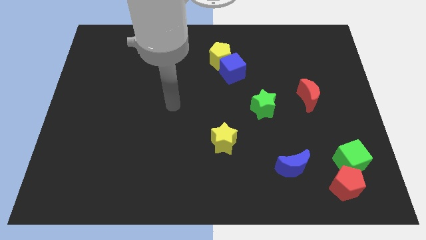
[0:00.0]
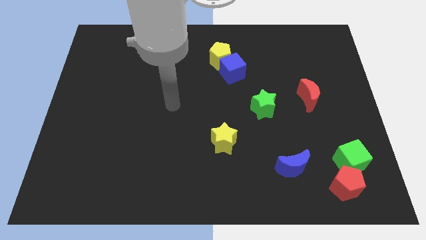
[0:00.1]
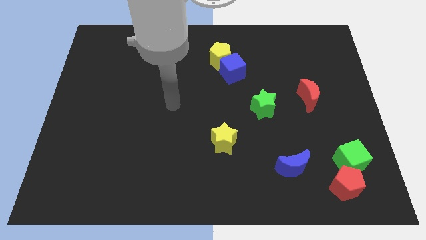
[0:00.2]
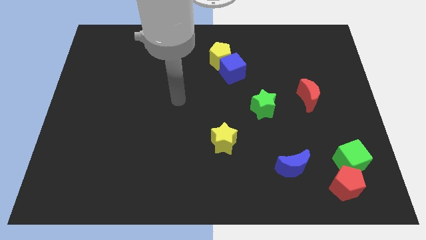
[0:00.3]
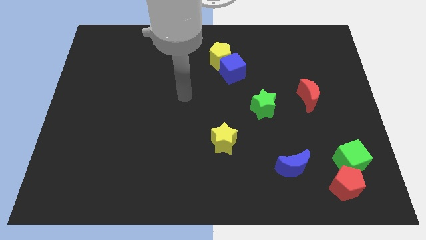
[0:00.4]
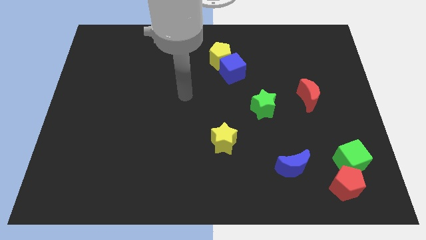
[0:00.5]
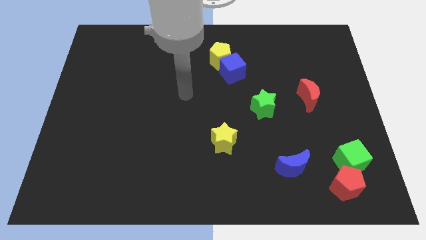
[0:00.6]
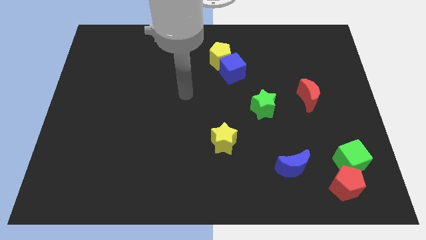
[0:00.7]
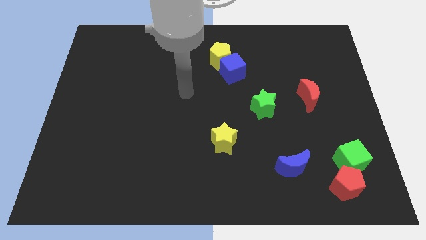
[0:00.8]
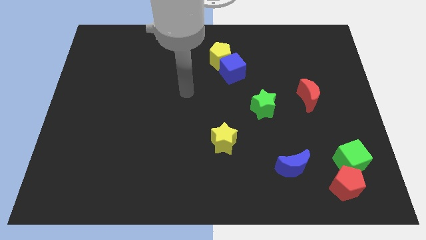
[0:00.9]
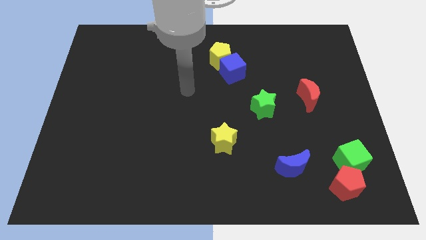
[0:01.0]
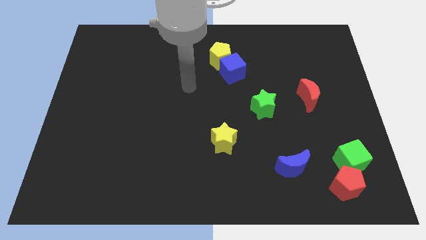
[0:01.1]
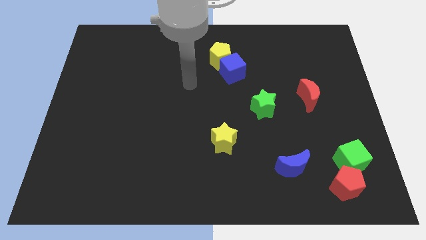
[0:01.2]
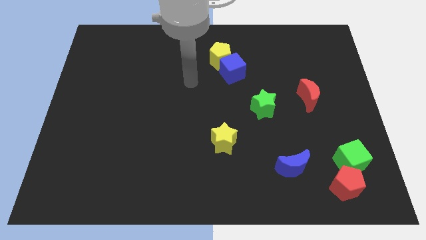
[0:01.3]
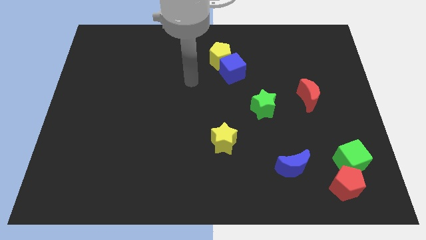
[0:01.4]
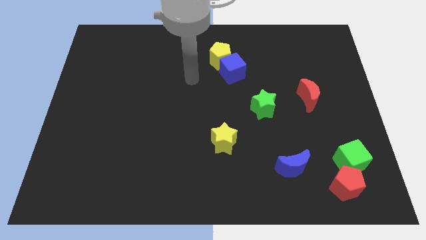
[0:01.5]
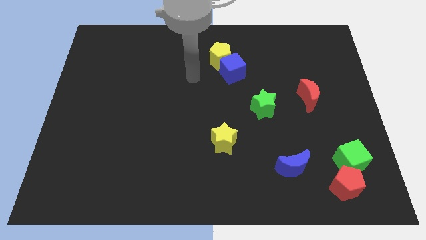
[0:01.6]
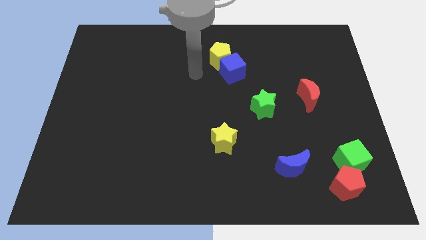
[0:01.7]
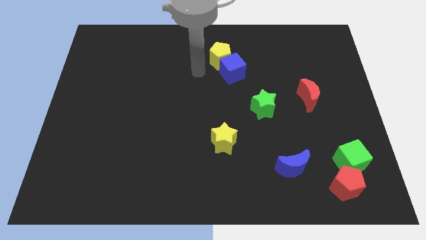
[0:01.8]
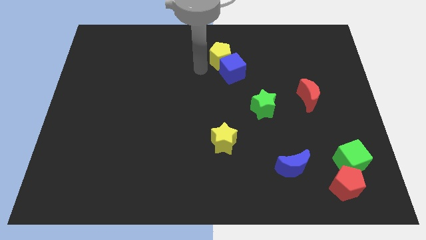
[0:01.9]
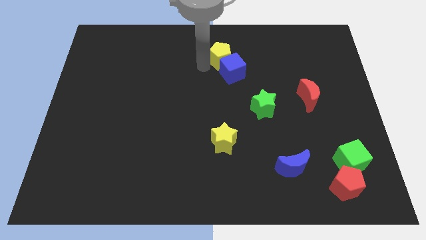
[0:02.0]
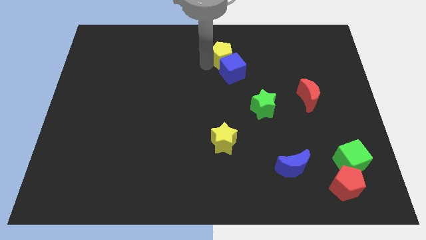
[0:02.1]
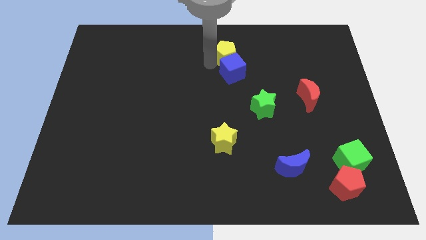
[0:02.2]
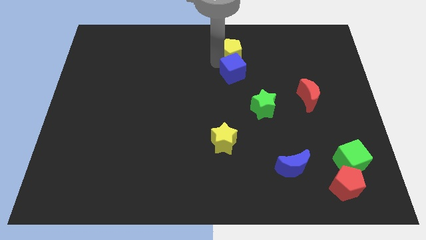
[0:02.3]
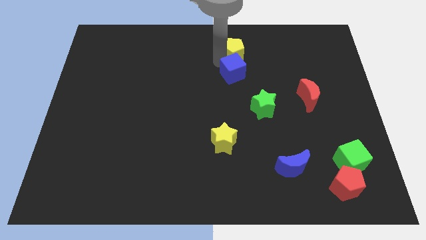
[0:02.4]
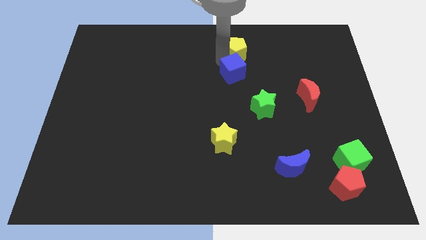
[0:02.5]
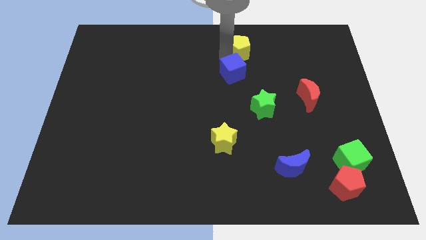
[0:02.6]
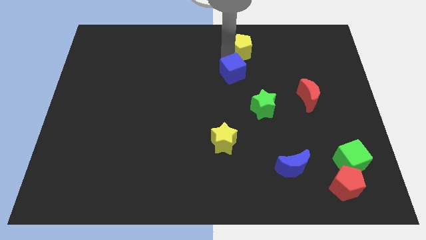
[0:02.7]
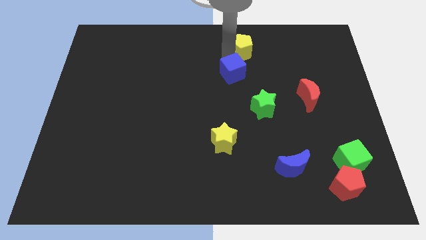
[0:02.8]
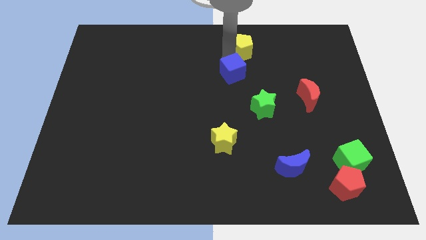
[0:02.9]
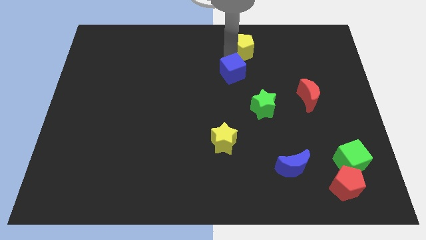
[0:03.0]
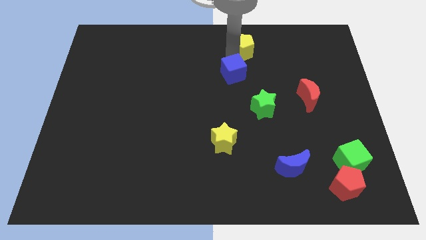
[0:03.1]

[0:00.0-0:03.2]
place your arm on the top of blue cube

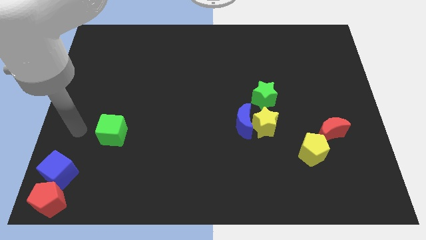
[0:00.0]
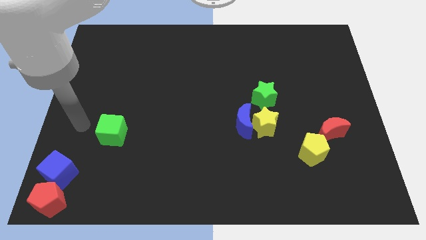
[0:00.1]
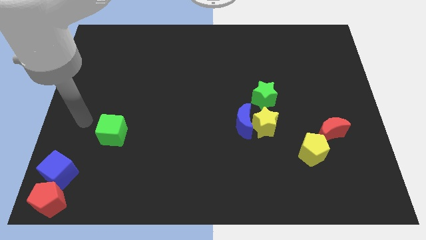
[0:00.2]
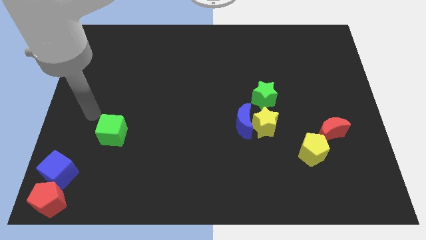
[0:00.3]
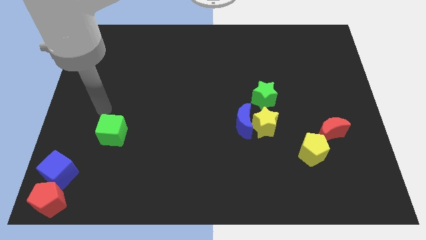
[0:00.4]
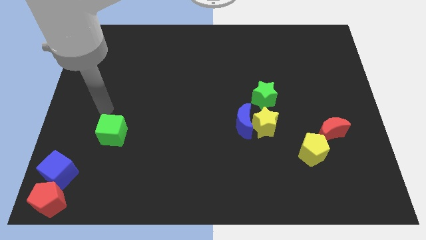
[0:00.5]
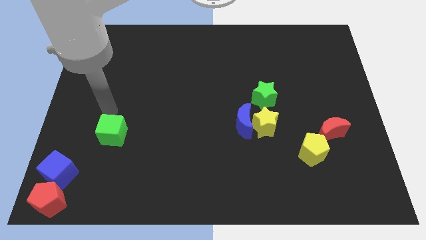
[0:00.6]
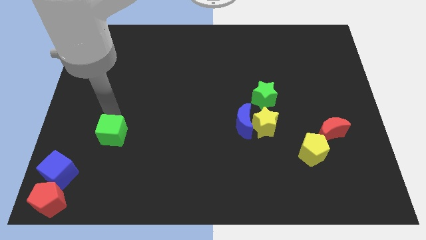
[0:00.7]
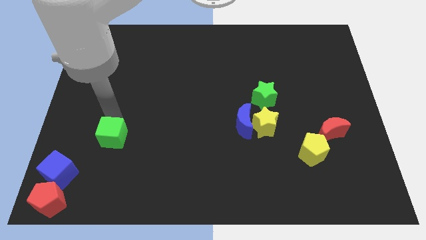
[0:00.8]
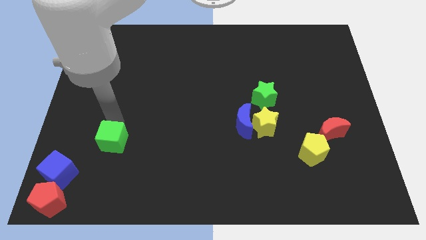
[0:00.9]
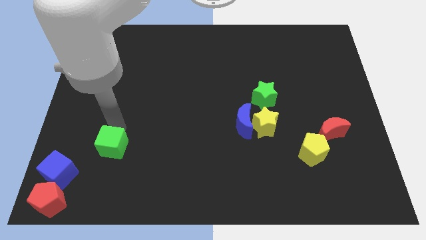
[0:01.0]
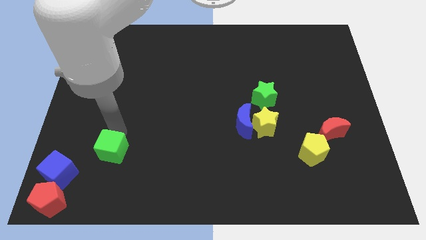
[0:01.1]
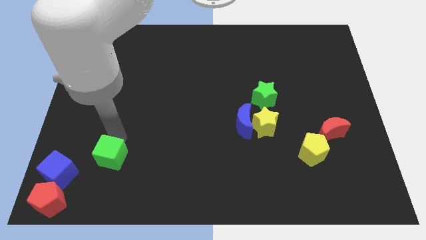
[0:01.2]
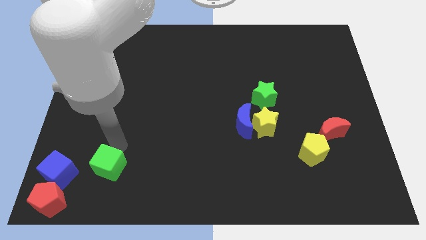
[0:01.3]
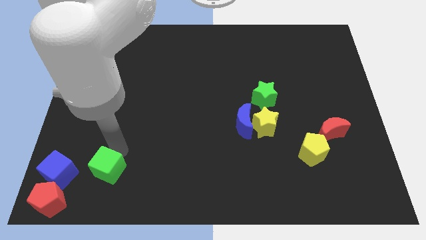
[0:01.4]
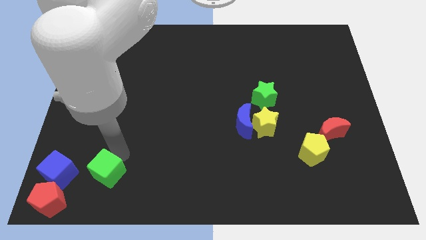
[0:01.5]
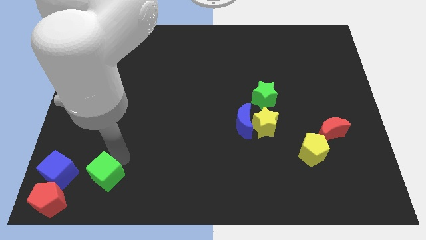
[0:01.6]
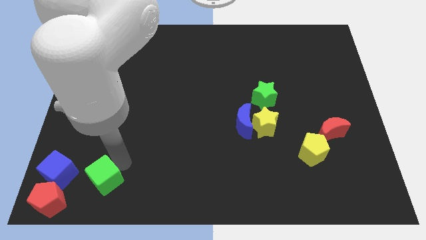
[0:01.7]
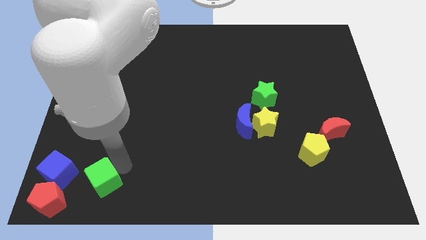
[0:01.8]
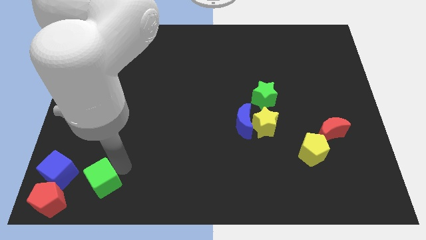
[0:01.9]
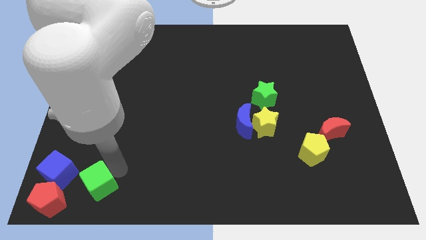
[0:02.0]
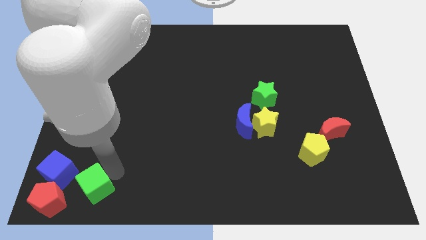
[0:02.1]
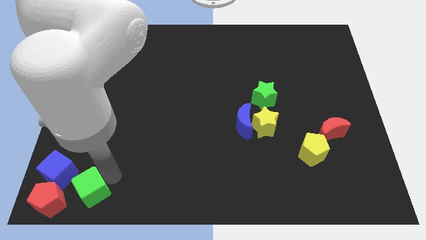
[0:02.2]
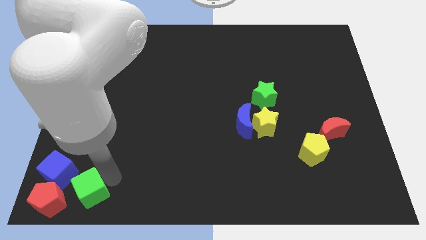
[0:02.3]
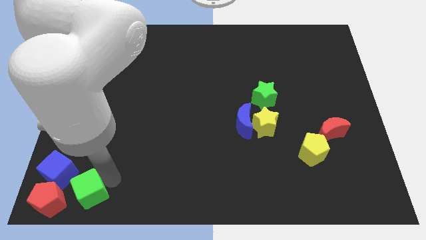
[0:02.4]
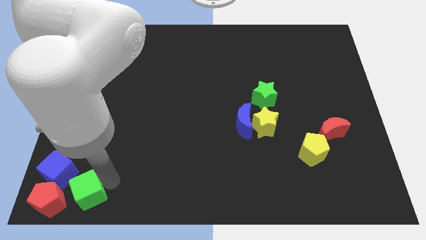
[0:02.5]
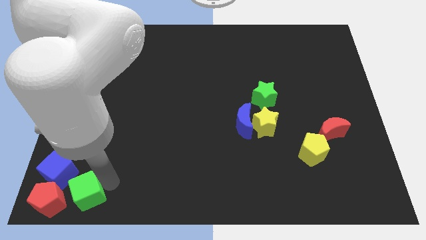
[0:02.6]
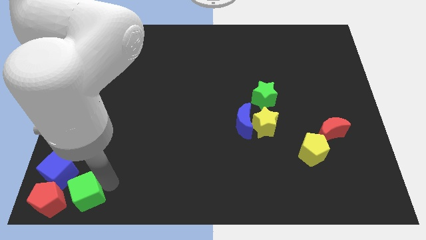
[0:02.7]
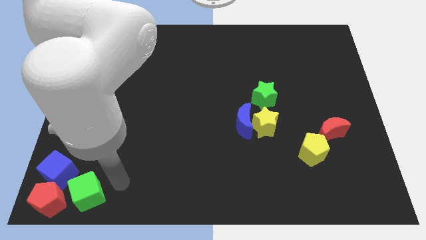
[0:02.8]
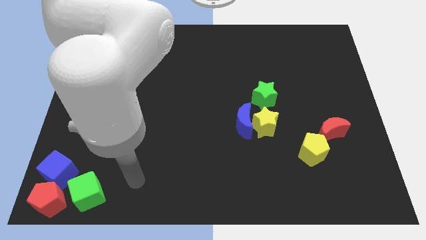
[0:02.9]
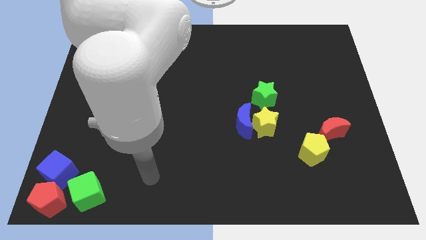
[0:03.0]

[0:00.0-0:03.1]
put the green cube to the right side of the red pentagon

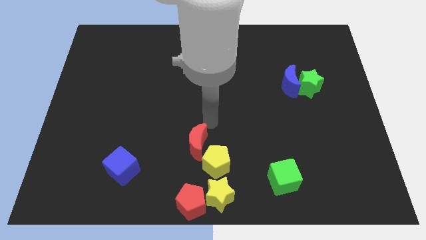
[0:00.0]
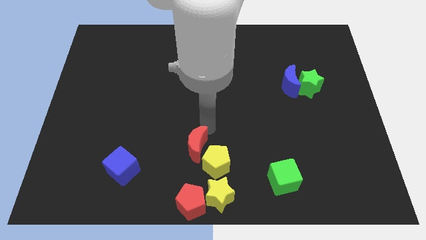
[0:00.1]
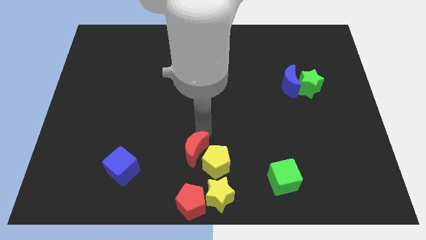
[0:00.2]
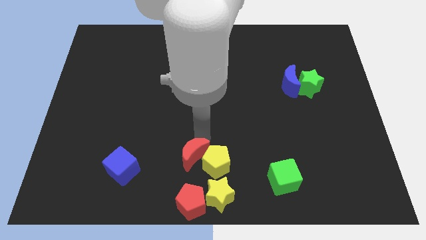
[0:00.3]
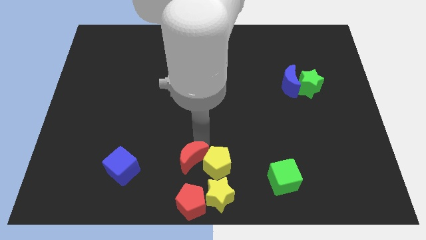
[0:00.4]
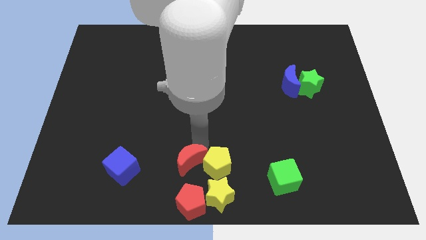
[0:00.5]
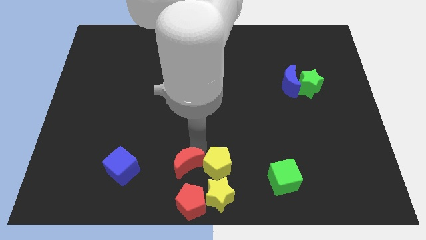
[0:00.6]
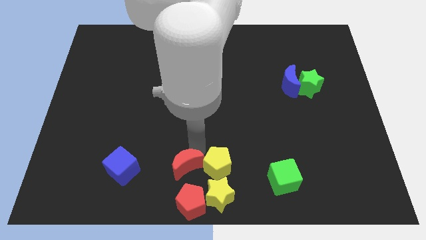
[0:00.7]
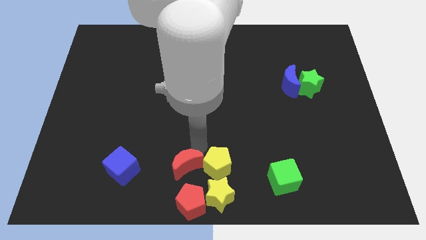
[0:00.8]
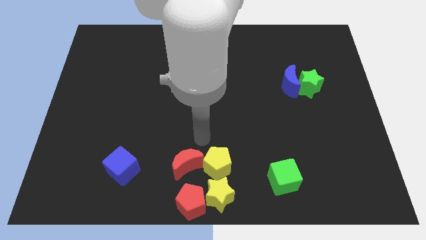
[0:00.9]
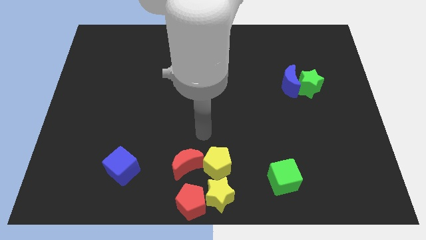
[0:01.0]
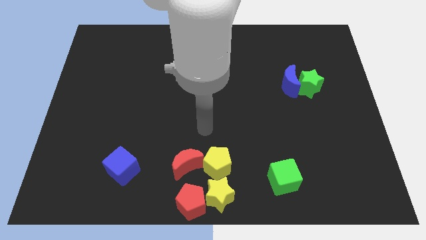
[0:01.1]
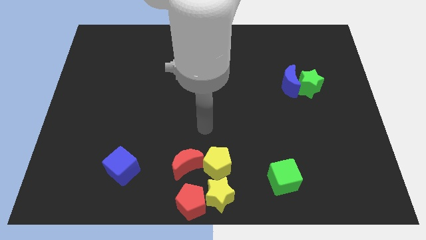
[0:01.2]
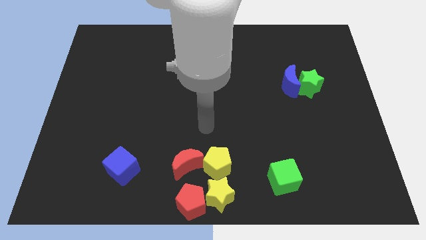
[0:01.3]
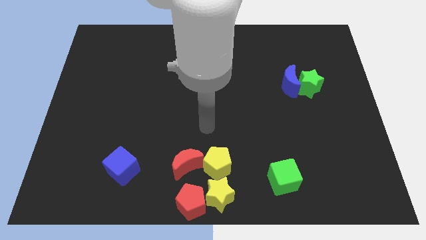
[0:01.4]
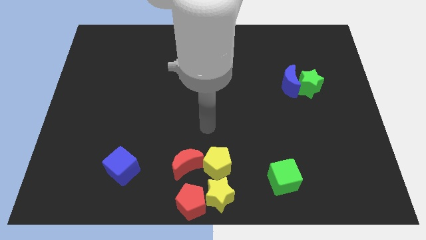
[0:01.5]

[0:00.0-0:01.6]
place the red moon left to the yellow pentagon

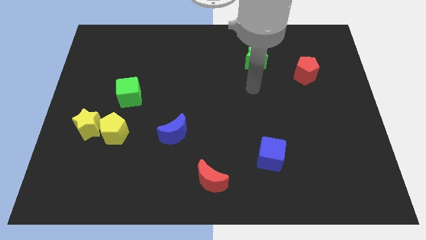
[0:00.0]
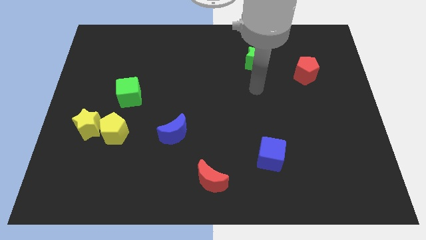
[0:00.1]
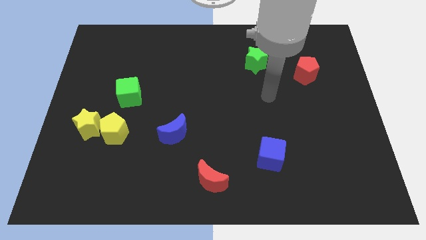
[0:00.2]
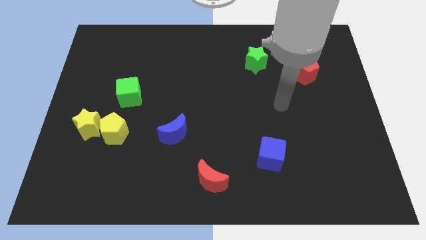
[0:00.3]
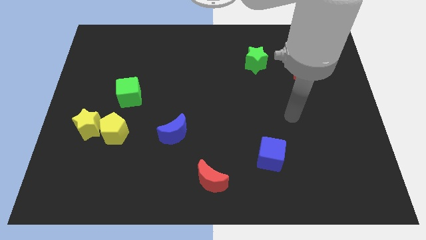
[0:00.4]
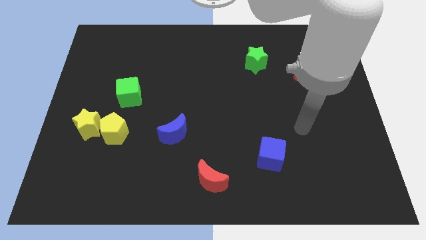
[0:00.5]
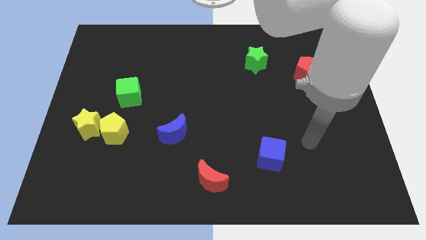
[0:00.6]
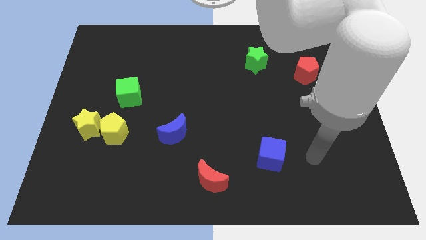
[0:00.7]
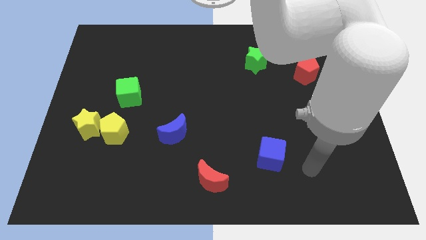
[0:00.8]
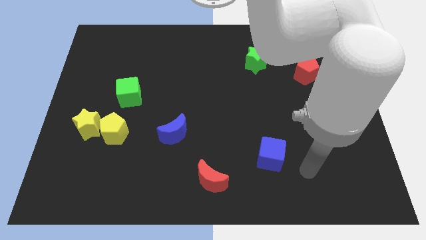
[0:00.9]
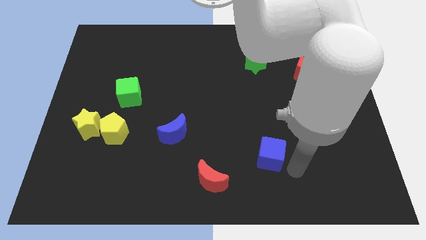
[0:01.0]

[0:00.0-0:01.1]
move your arm to the right side of the blue cube
